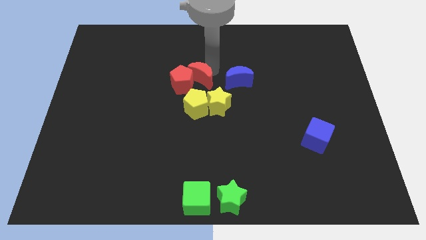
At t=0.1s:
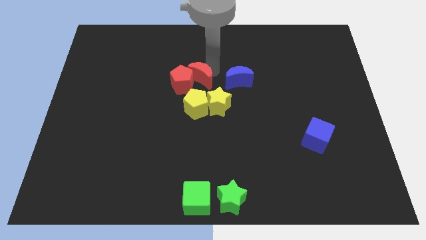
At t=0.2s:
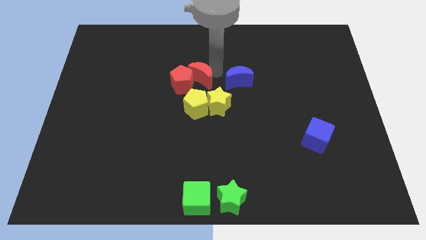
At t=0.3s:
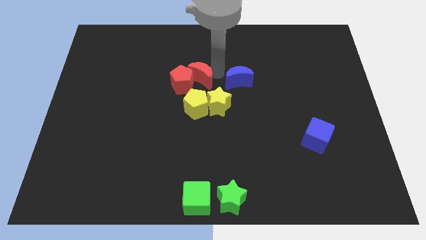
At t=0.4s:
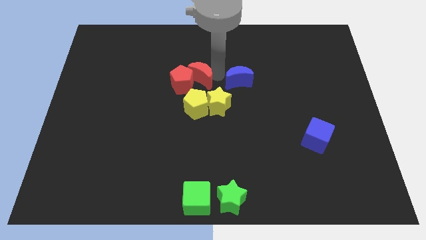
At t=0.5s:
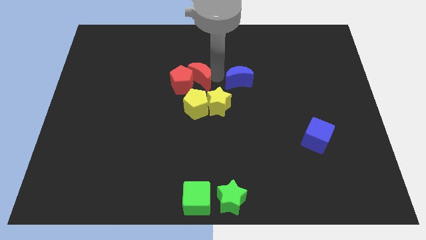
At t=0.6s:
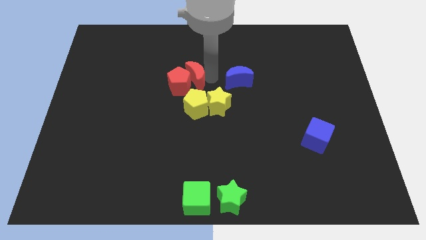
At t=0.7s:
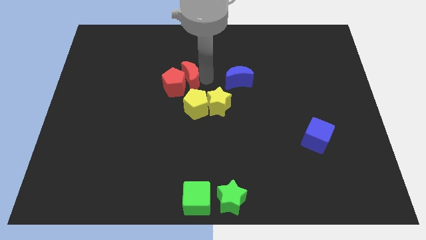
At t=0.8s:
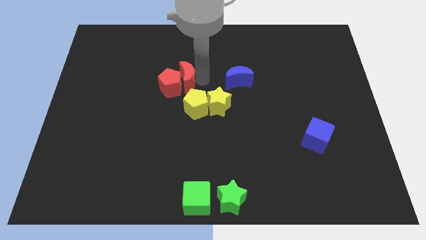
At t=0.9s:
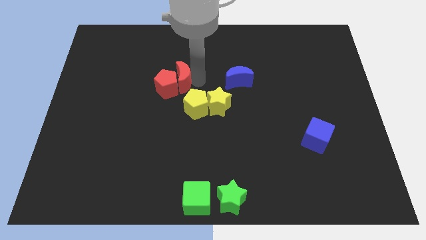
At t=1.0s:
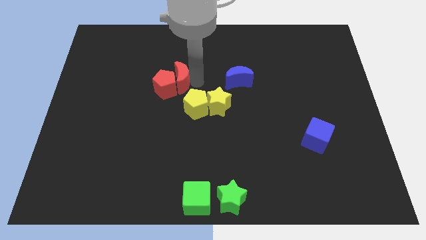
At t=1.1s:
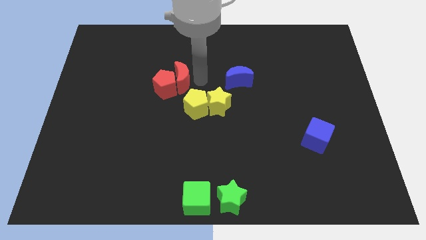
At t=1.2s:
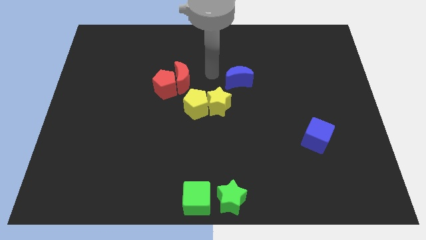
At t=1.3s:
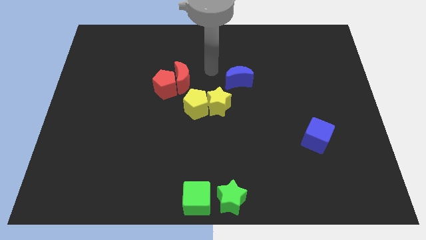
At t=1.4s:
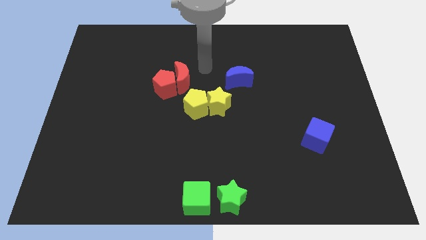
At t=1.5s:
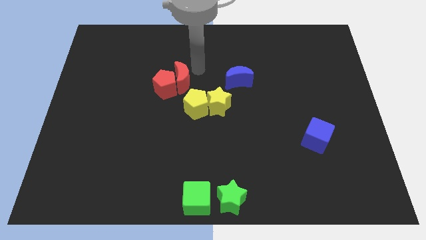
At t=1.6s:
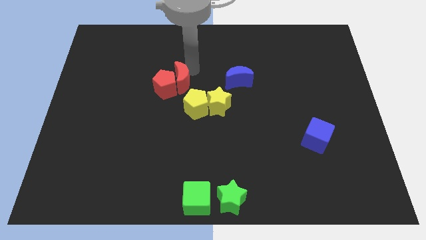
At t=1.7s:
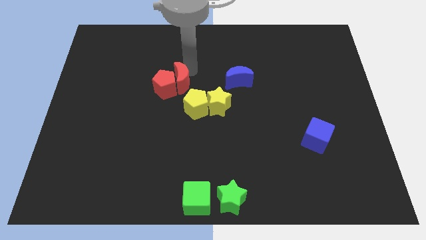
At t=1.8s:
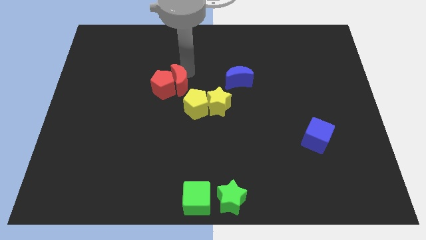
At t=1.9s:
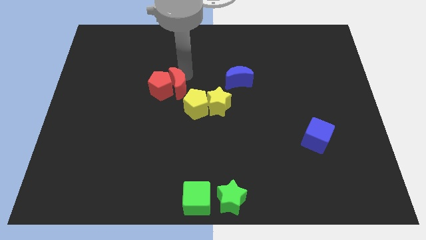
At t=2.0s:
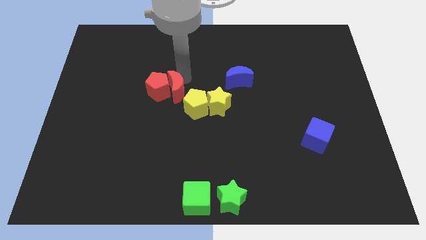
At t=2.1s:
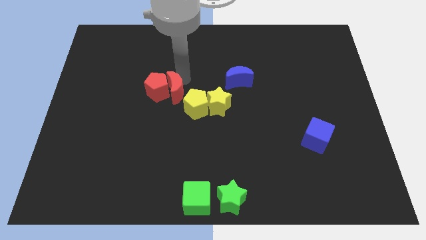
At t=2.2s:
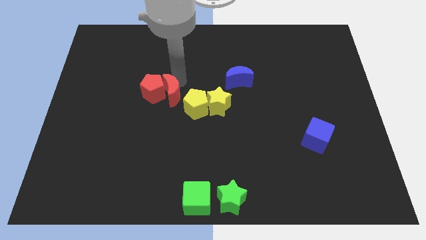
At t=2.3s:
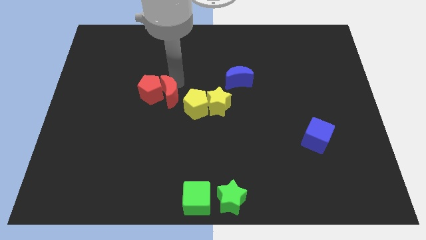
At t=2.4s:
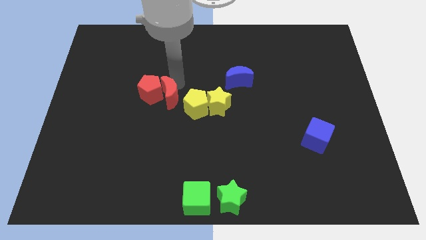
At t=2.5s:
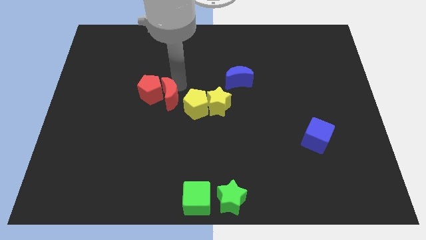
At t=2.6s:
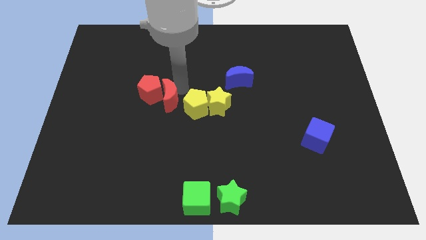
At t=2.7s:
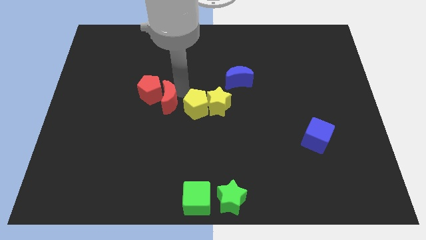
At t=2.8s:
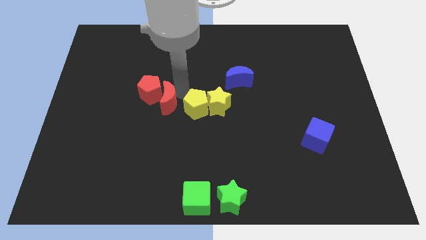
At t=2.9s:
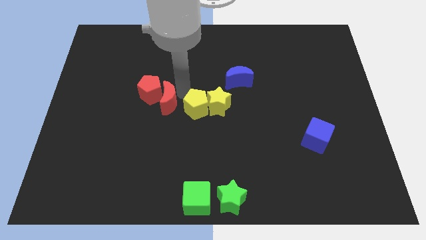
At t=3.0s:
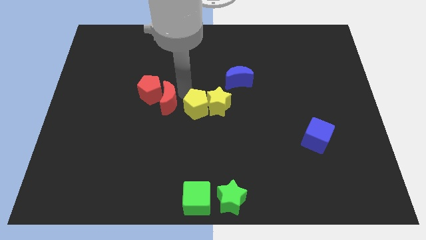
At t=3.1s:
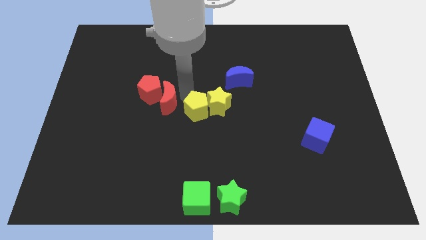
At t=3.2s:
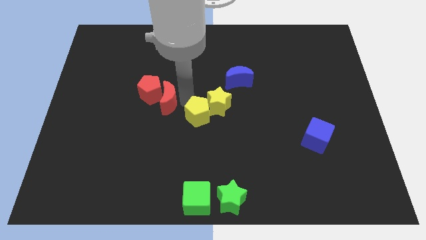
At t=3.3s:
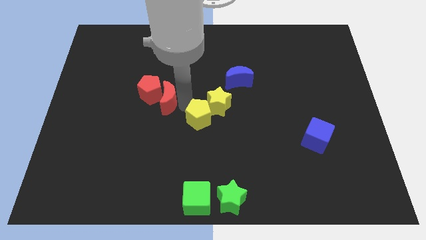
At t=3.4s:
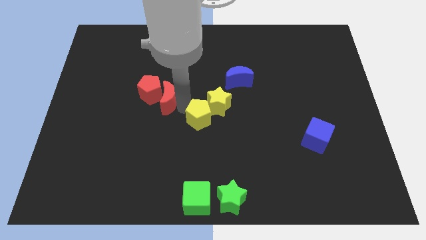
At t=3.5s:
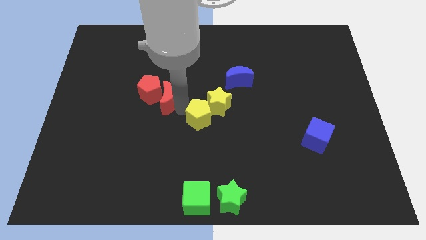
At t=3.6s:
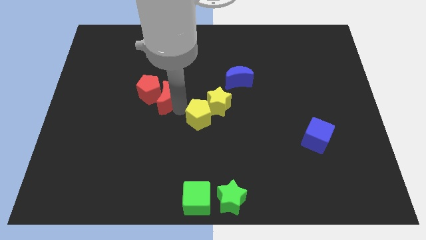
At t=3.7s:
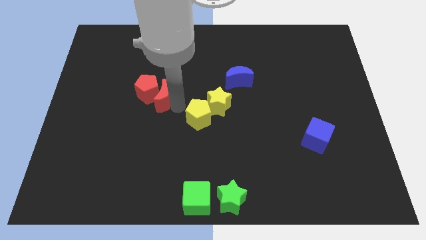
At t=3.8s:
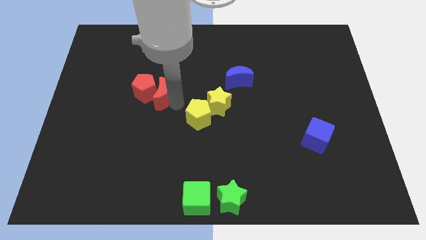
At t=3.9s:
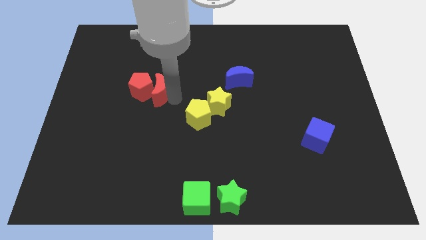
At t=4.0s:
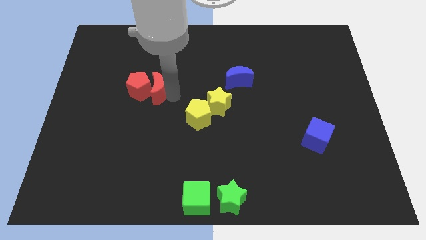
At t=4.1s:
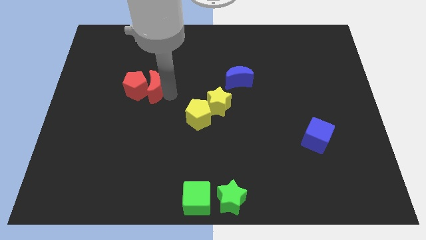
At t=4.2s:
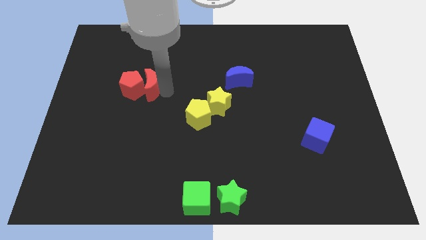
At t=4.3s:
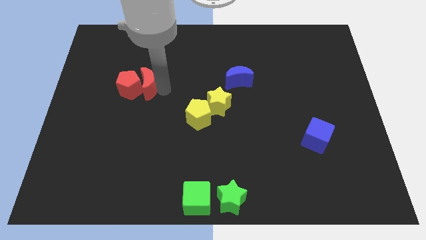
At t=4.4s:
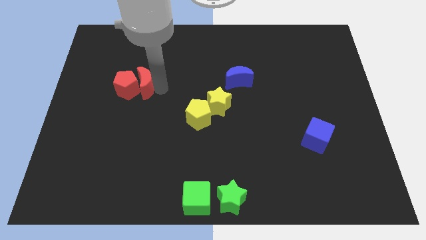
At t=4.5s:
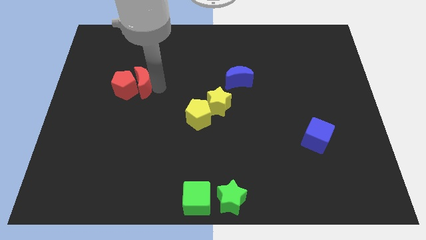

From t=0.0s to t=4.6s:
move red blocks towards left

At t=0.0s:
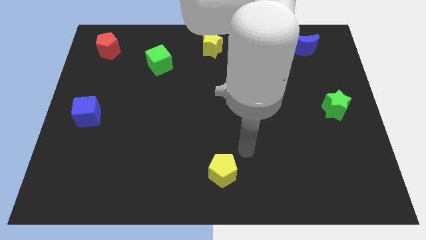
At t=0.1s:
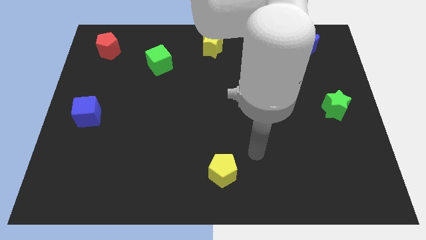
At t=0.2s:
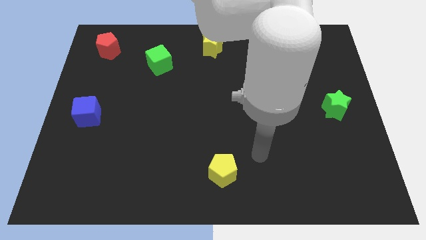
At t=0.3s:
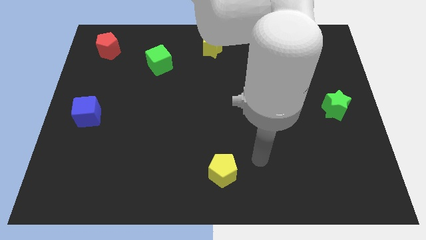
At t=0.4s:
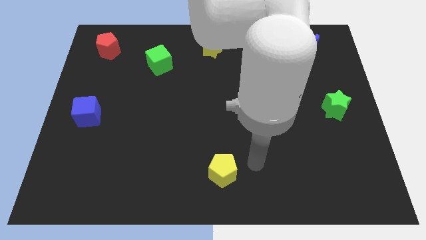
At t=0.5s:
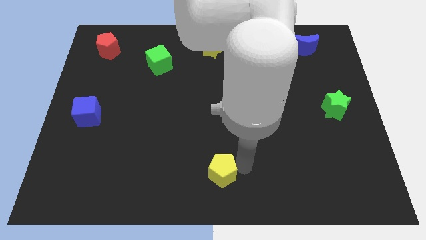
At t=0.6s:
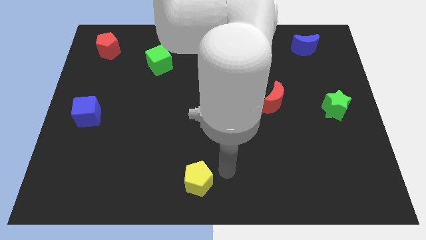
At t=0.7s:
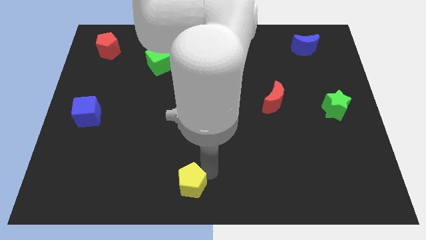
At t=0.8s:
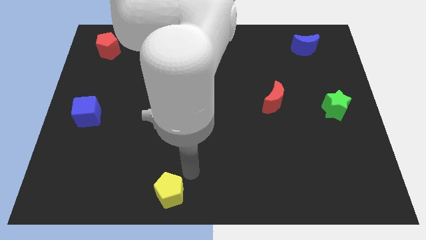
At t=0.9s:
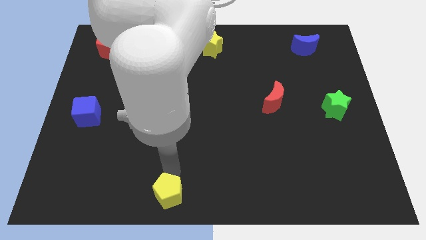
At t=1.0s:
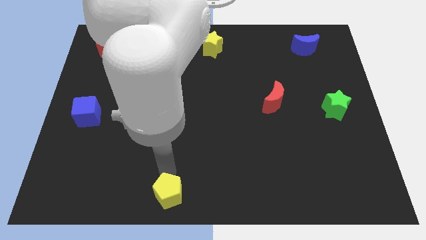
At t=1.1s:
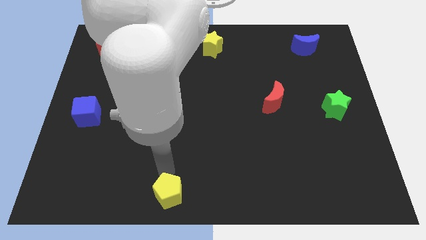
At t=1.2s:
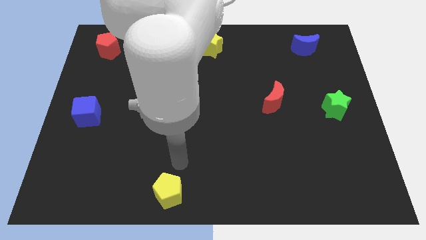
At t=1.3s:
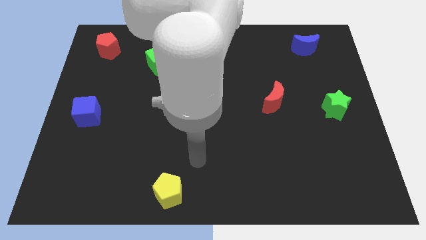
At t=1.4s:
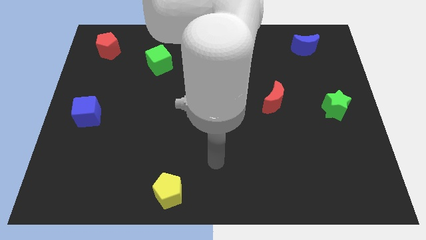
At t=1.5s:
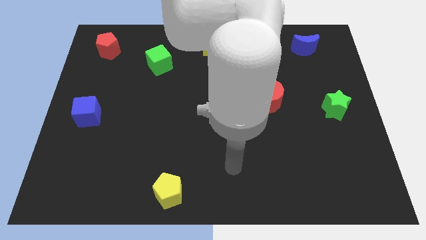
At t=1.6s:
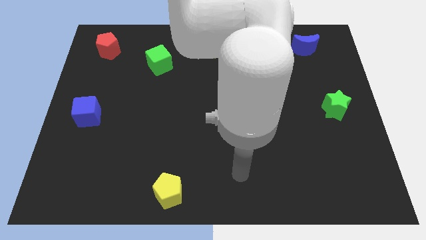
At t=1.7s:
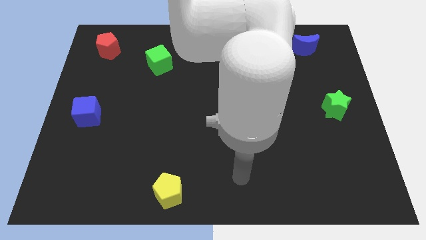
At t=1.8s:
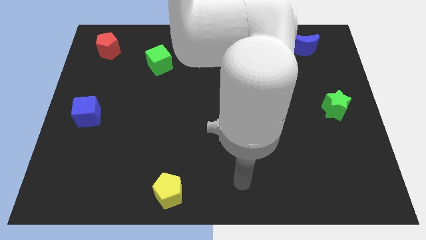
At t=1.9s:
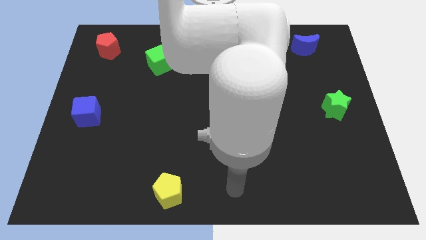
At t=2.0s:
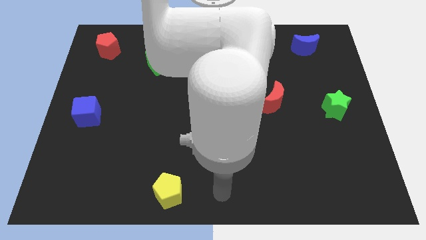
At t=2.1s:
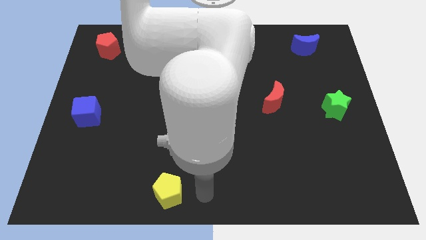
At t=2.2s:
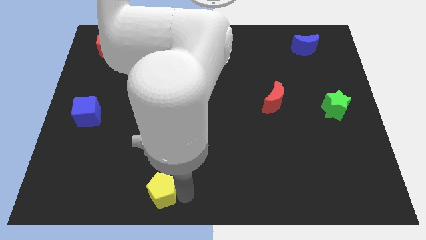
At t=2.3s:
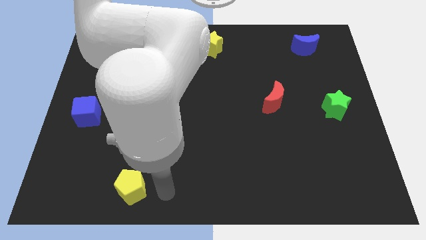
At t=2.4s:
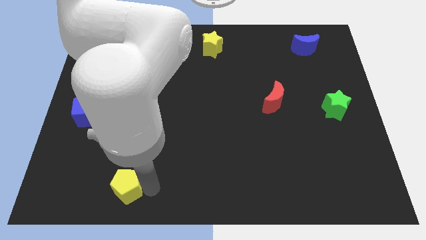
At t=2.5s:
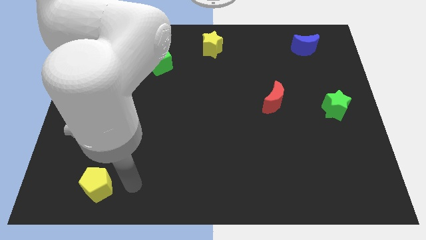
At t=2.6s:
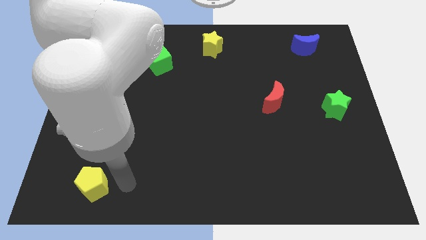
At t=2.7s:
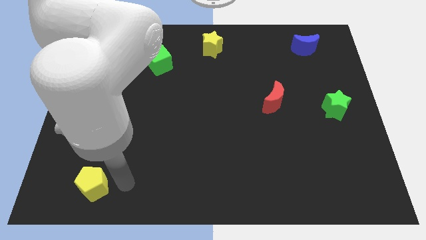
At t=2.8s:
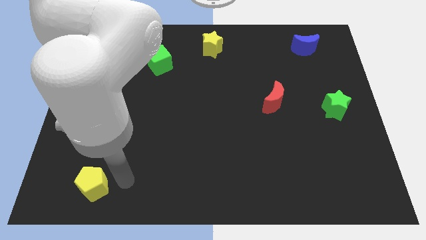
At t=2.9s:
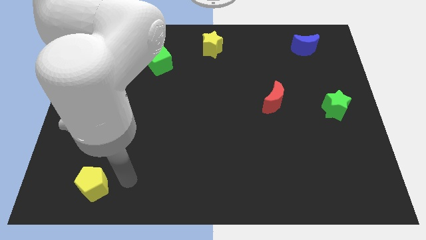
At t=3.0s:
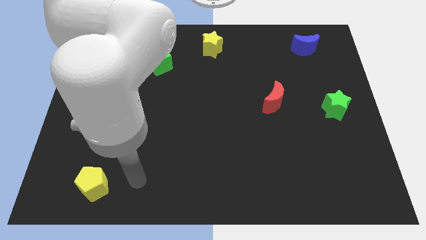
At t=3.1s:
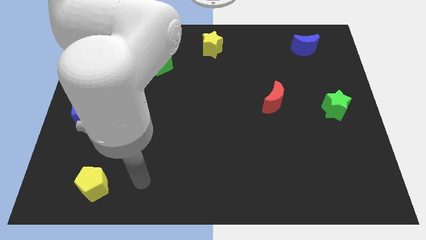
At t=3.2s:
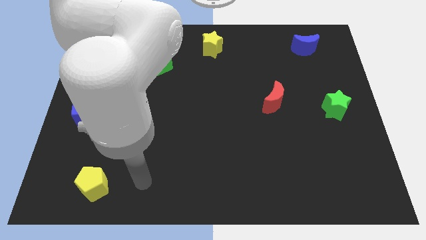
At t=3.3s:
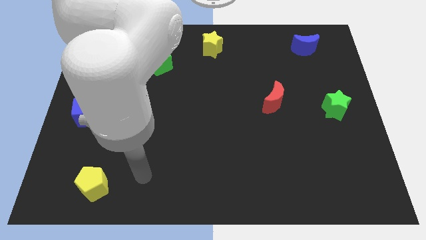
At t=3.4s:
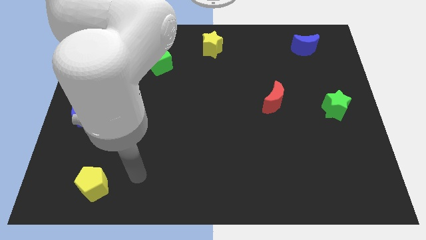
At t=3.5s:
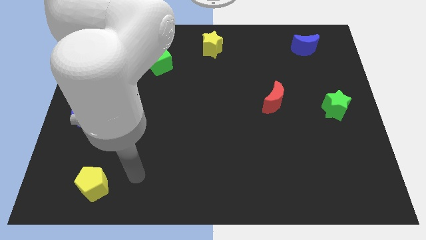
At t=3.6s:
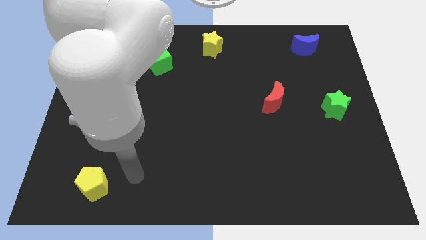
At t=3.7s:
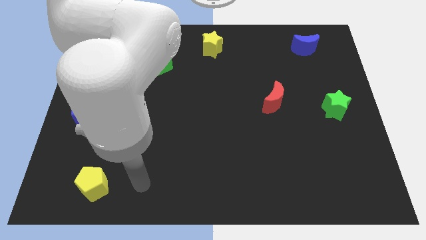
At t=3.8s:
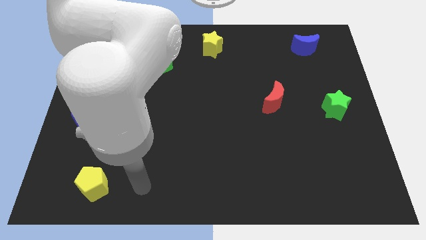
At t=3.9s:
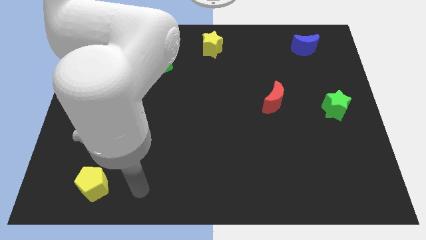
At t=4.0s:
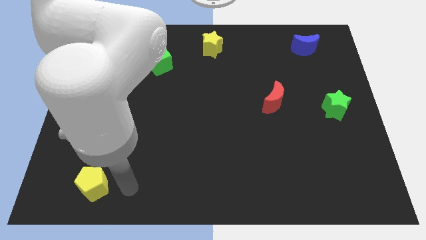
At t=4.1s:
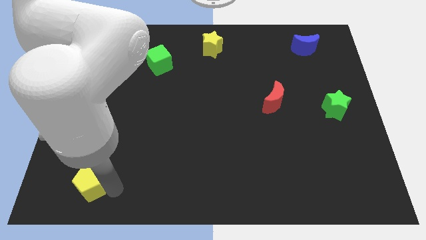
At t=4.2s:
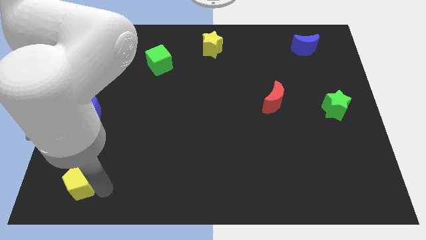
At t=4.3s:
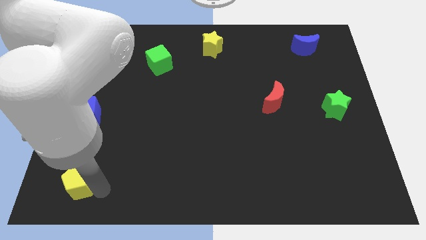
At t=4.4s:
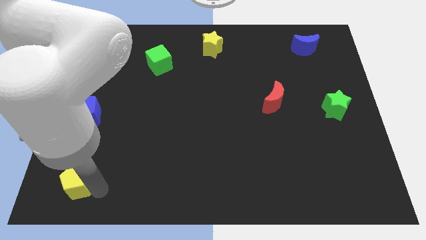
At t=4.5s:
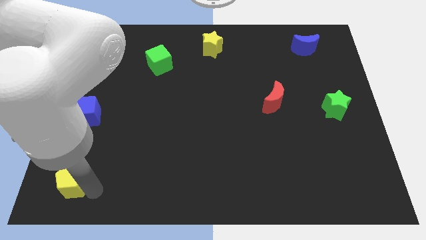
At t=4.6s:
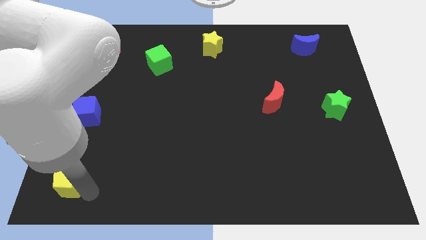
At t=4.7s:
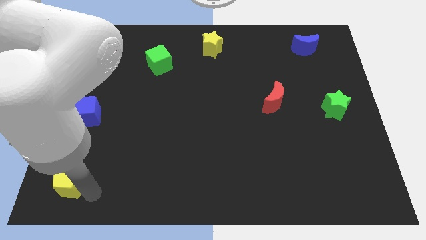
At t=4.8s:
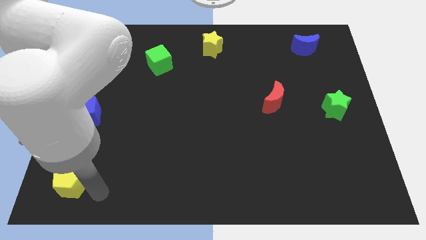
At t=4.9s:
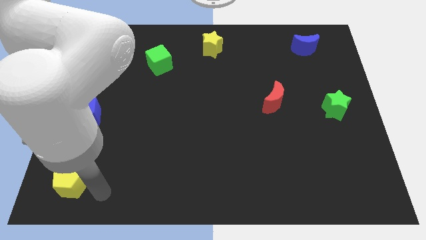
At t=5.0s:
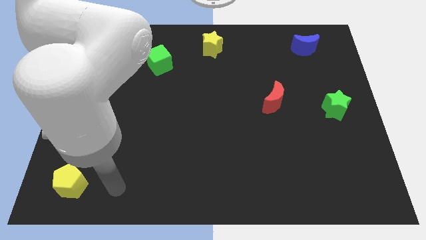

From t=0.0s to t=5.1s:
move yellow pentagon to the bottom left
